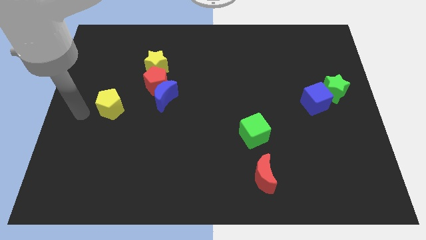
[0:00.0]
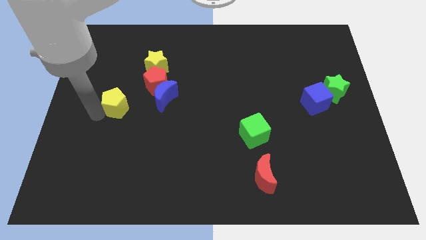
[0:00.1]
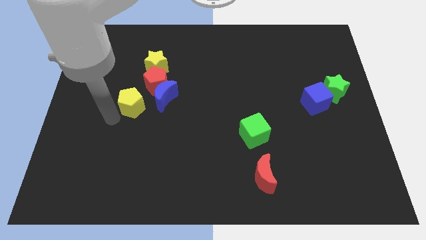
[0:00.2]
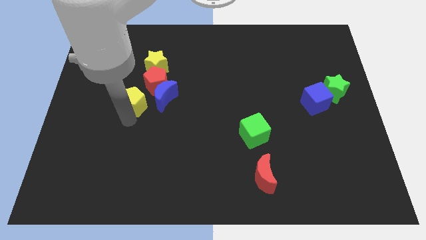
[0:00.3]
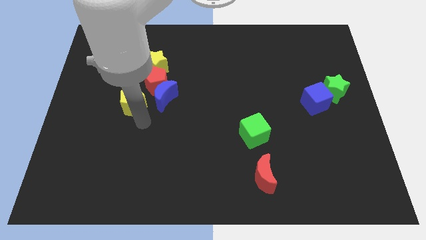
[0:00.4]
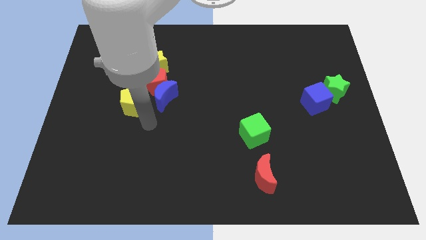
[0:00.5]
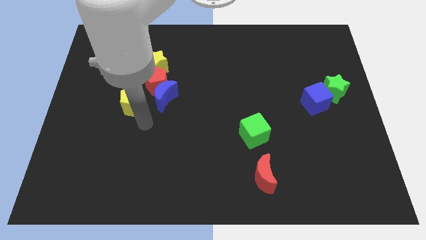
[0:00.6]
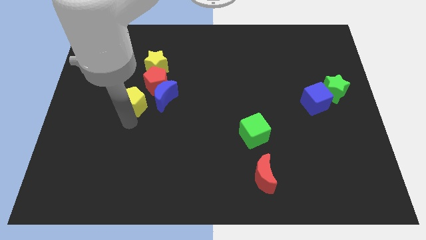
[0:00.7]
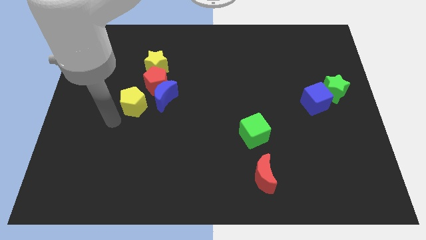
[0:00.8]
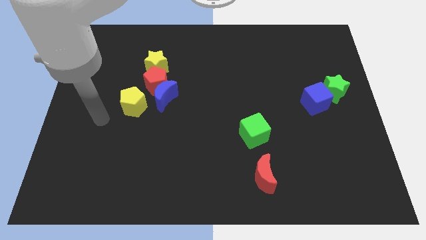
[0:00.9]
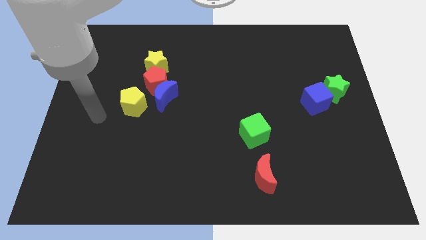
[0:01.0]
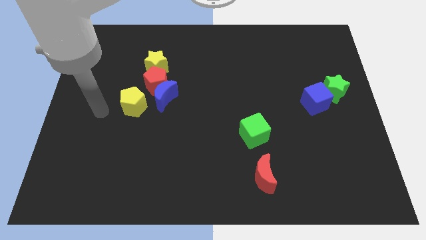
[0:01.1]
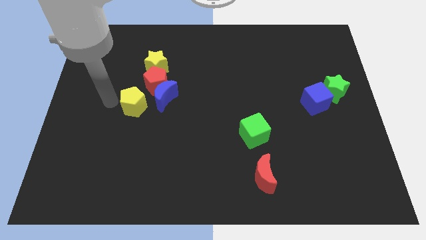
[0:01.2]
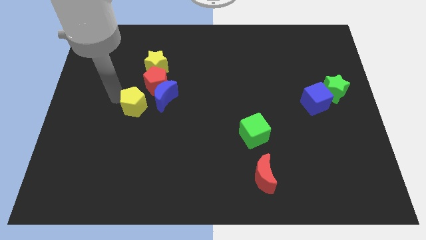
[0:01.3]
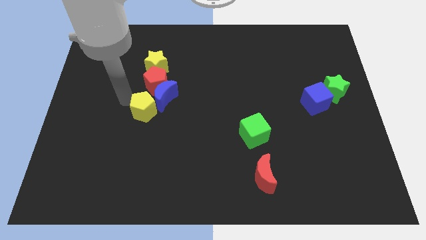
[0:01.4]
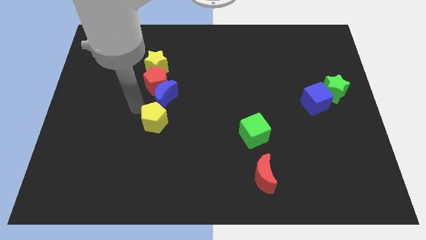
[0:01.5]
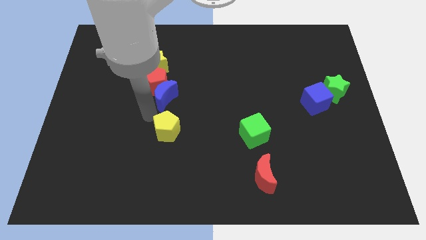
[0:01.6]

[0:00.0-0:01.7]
place the yellow pentagon vertically below the blue crescent

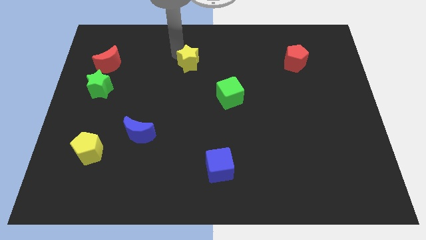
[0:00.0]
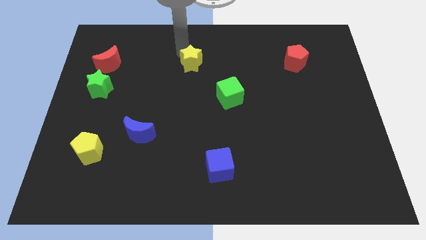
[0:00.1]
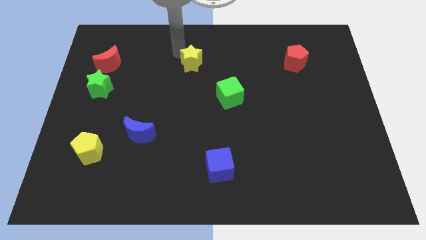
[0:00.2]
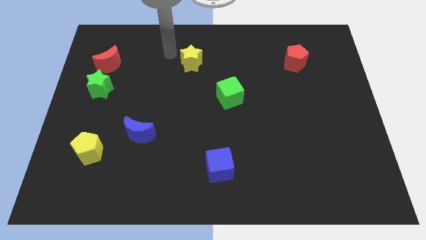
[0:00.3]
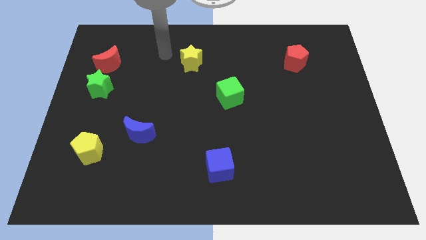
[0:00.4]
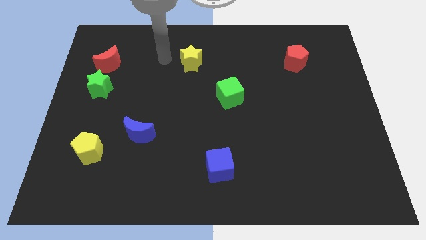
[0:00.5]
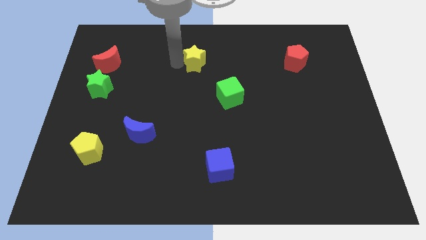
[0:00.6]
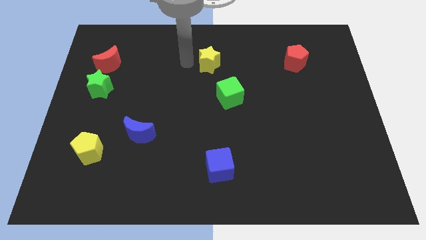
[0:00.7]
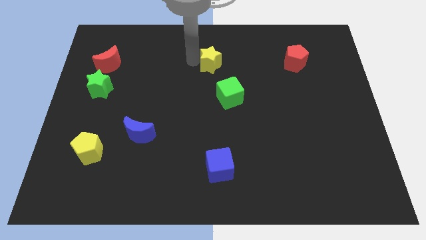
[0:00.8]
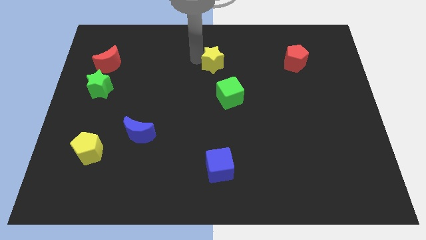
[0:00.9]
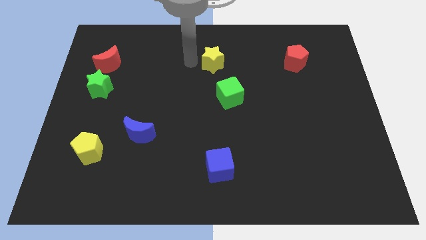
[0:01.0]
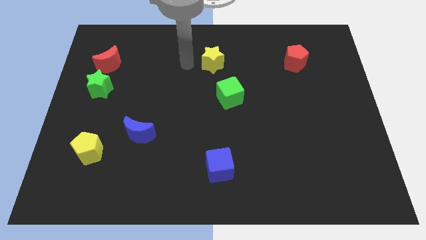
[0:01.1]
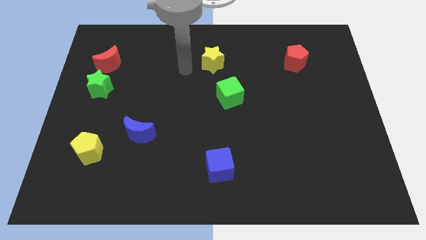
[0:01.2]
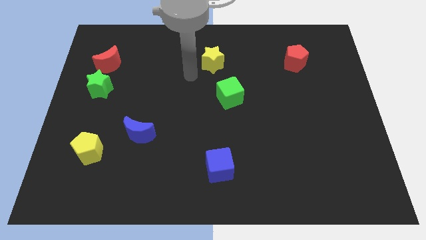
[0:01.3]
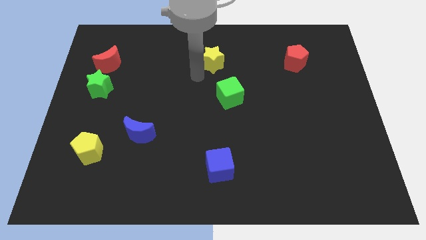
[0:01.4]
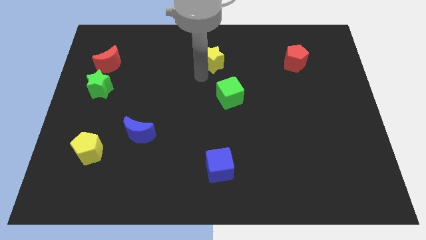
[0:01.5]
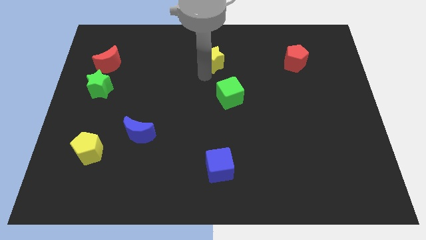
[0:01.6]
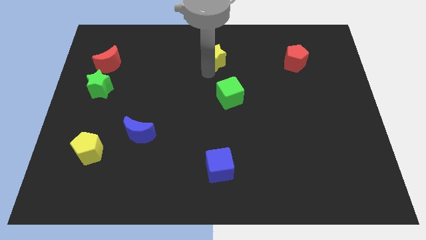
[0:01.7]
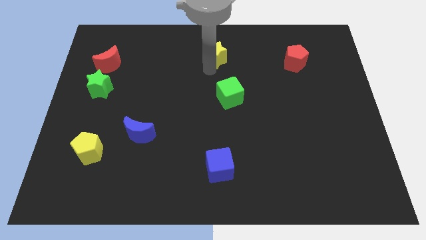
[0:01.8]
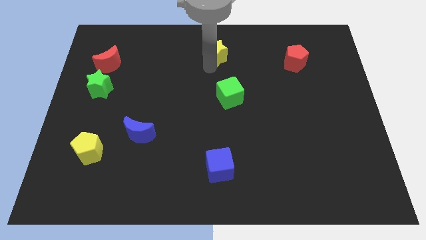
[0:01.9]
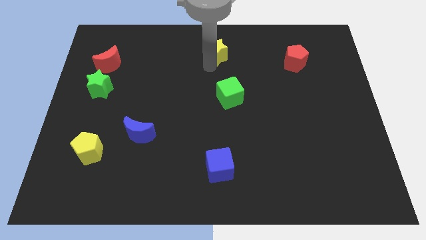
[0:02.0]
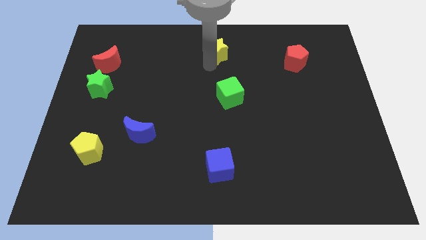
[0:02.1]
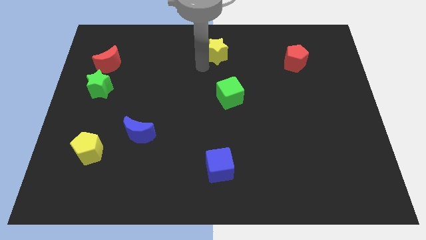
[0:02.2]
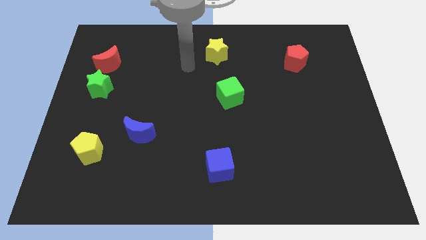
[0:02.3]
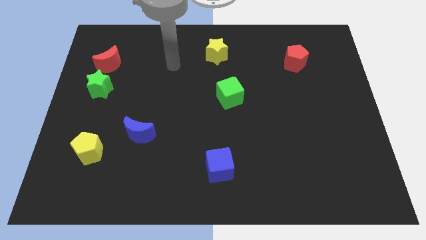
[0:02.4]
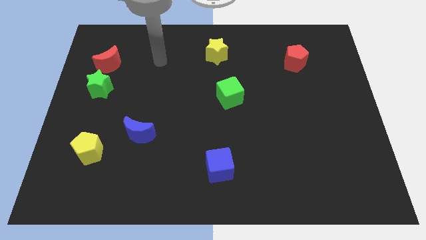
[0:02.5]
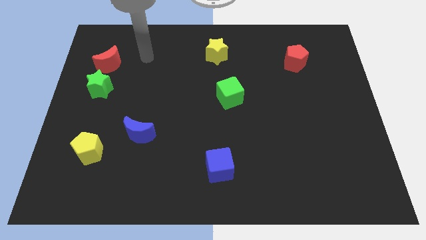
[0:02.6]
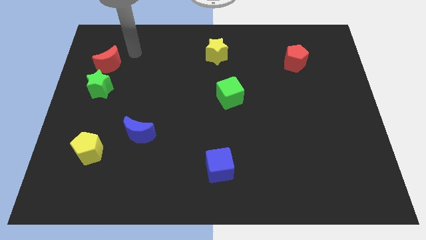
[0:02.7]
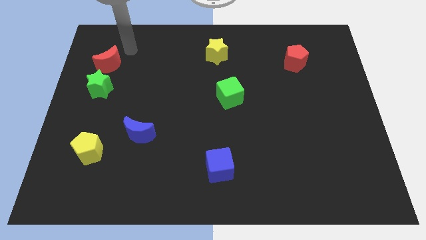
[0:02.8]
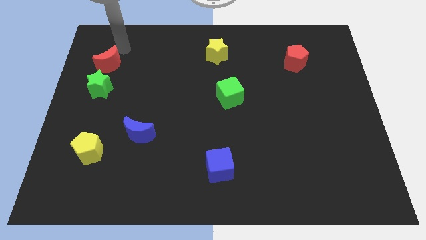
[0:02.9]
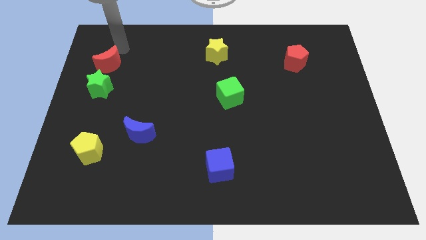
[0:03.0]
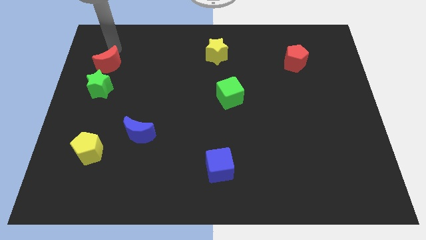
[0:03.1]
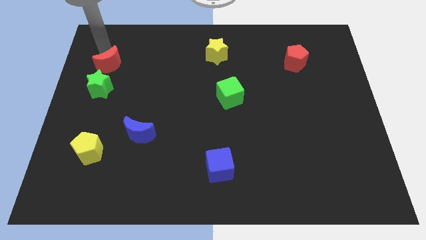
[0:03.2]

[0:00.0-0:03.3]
place the yellow star at the top center of the board

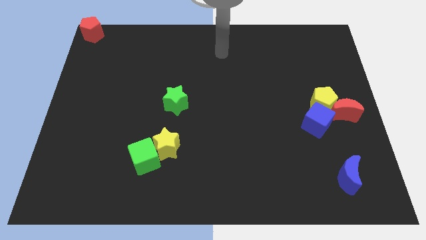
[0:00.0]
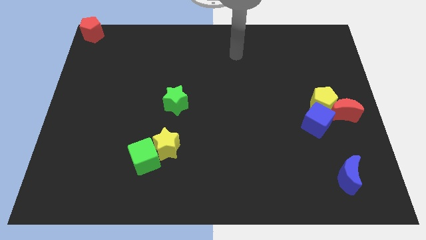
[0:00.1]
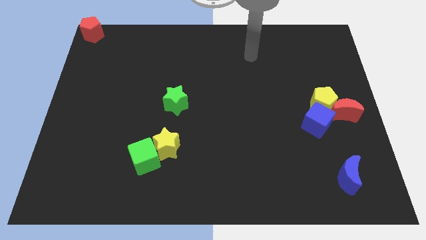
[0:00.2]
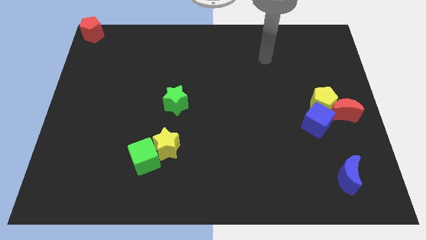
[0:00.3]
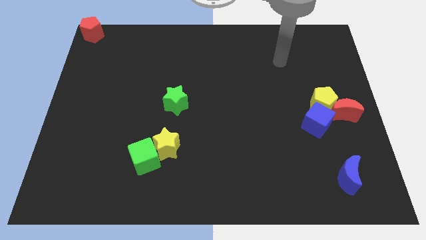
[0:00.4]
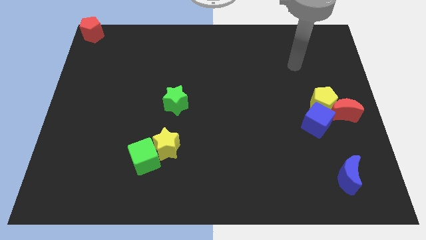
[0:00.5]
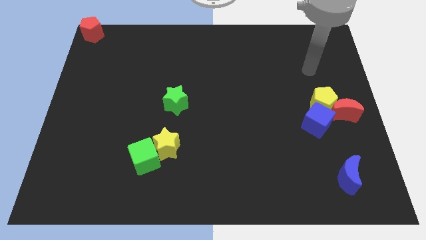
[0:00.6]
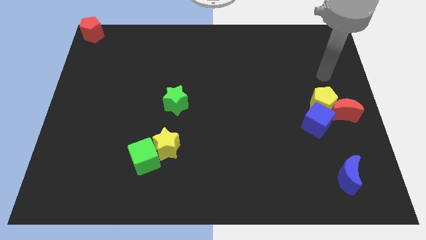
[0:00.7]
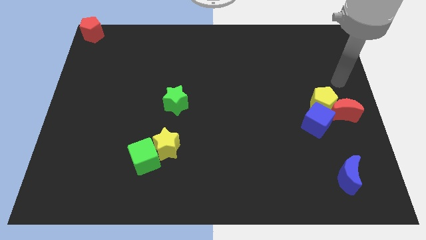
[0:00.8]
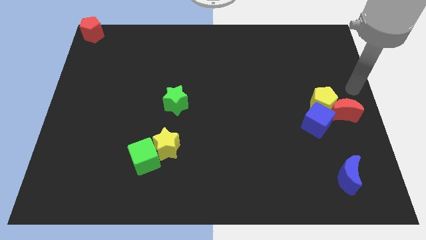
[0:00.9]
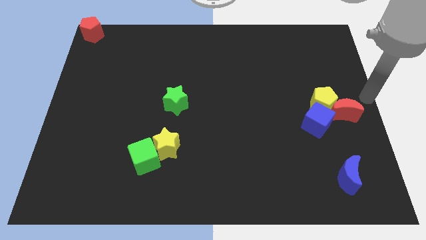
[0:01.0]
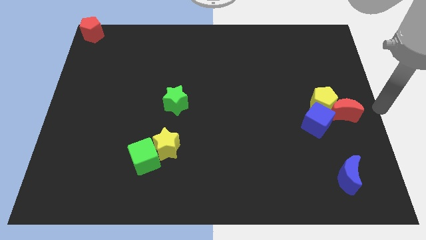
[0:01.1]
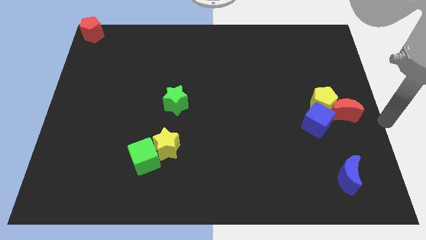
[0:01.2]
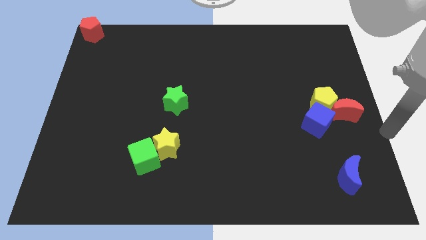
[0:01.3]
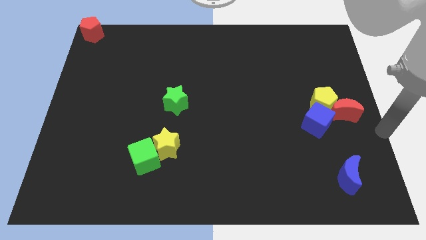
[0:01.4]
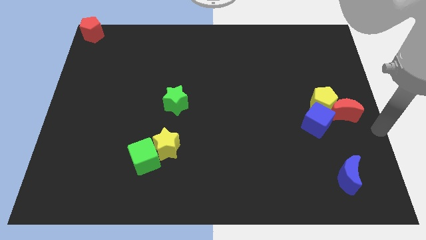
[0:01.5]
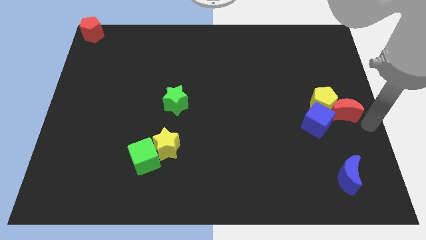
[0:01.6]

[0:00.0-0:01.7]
move your arm to the right of red moon

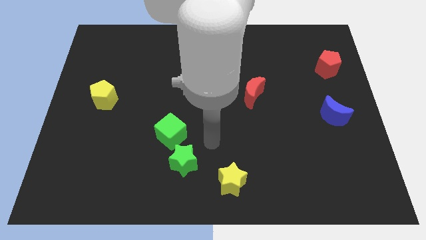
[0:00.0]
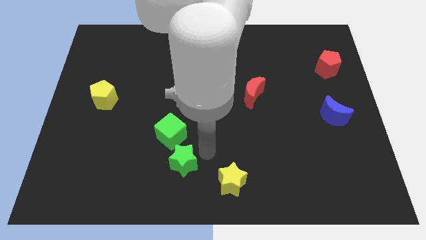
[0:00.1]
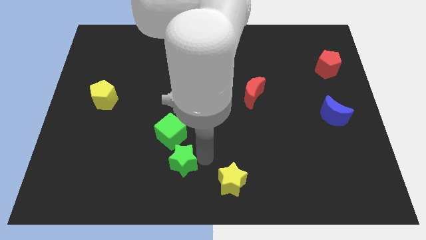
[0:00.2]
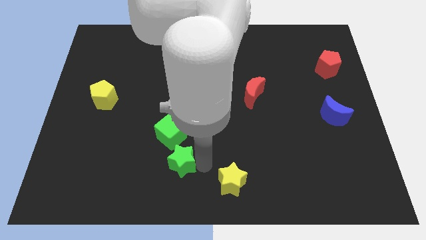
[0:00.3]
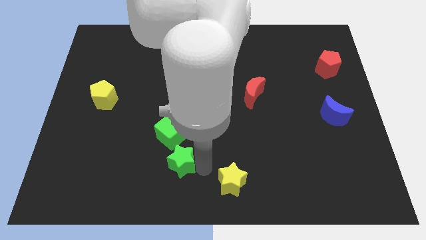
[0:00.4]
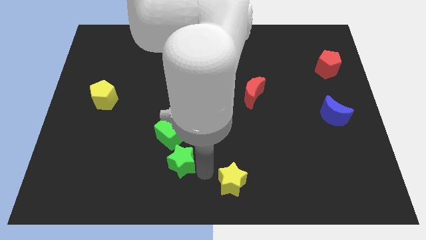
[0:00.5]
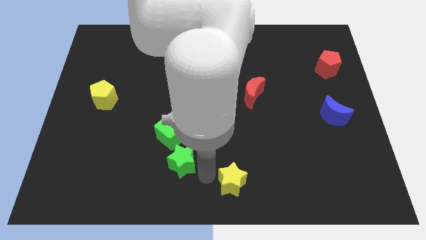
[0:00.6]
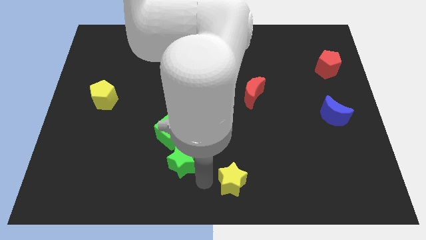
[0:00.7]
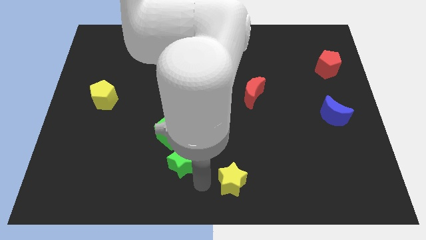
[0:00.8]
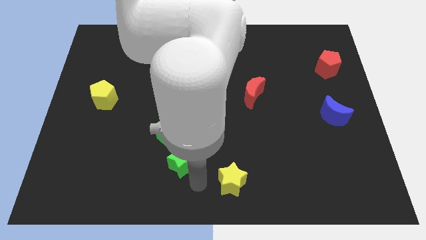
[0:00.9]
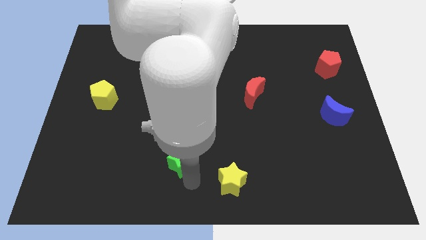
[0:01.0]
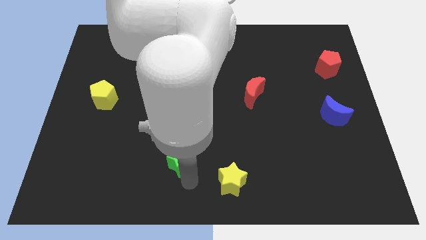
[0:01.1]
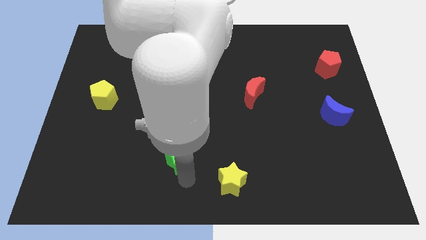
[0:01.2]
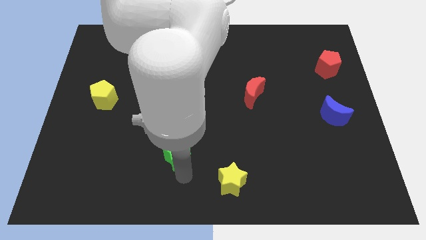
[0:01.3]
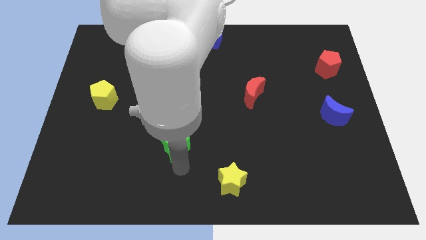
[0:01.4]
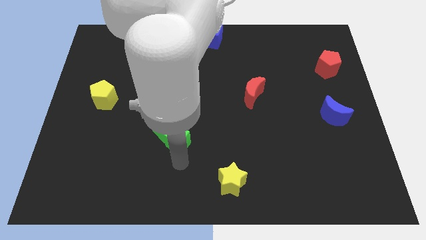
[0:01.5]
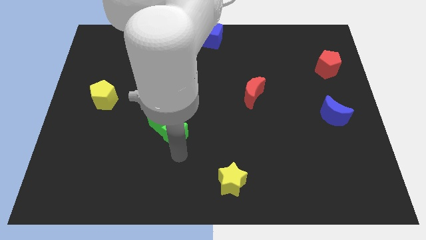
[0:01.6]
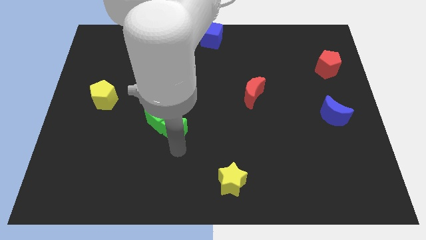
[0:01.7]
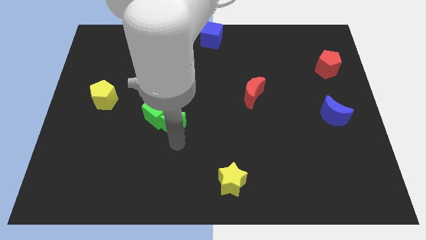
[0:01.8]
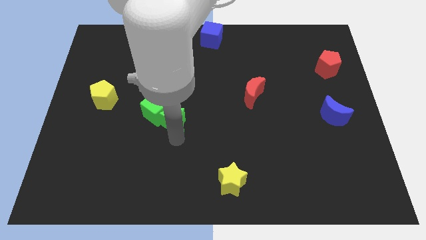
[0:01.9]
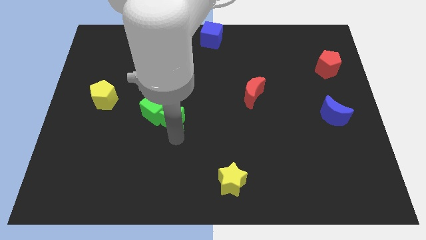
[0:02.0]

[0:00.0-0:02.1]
push the green star into the green cube

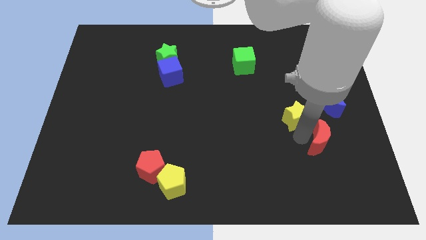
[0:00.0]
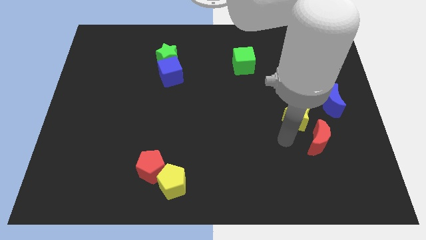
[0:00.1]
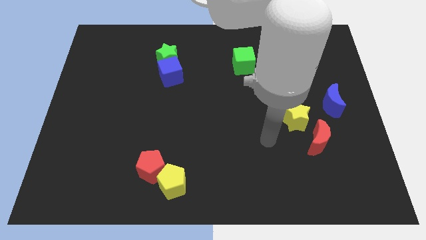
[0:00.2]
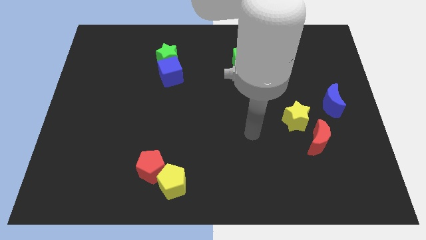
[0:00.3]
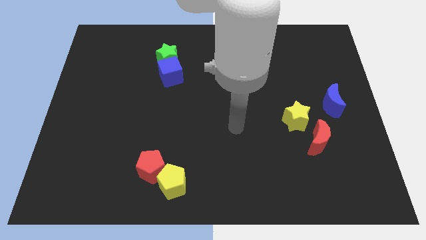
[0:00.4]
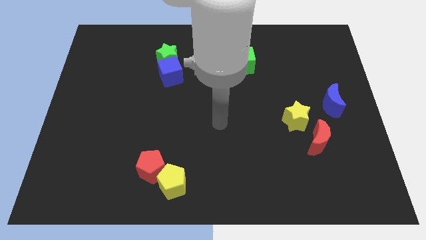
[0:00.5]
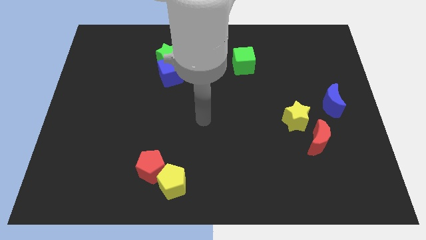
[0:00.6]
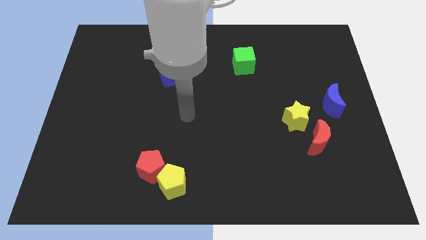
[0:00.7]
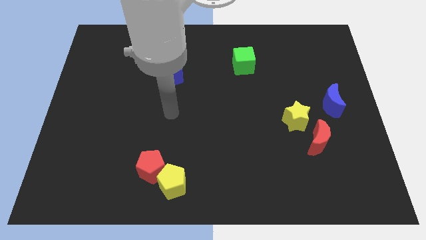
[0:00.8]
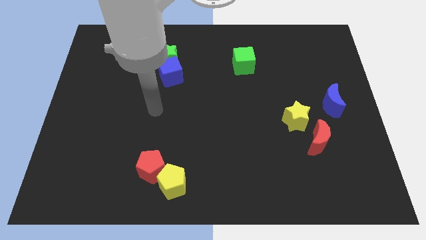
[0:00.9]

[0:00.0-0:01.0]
move your arm towards the center left side of the board
